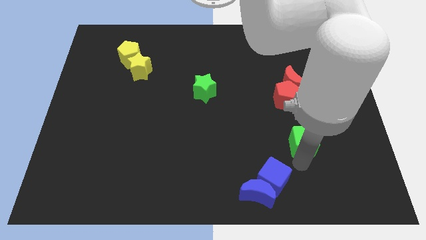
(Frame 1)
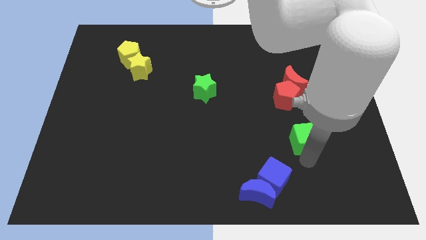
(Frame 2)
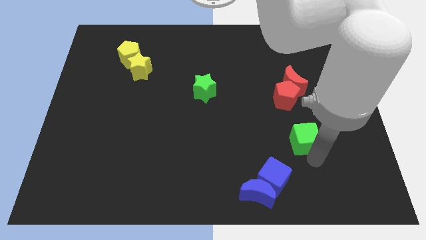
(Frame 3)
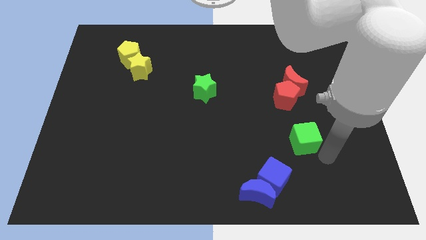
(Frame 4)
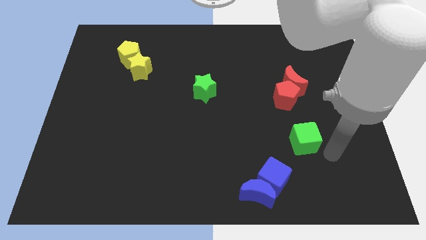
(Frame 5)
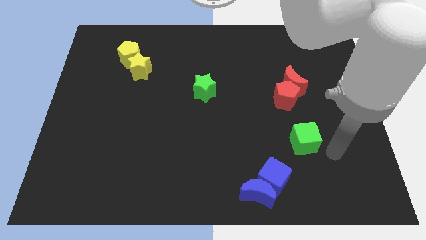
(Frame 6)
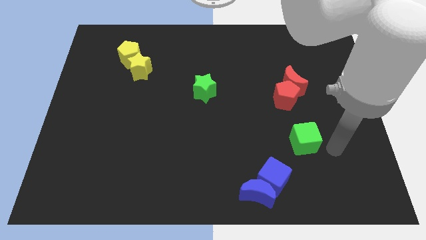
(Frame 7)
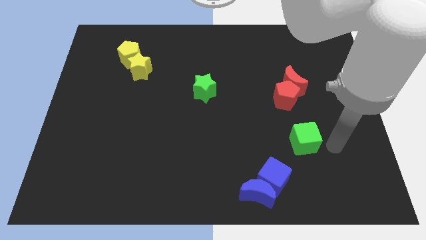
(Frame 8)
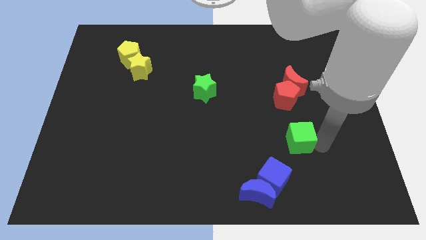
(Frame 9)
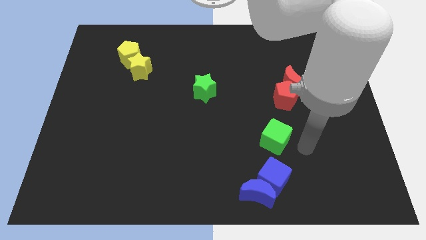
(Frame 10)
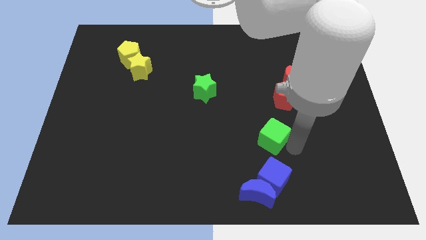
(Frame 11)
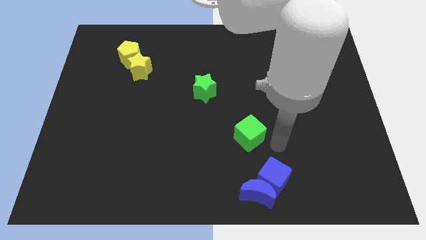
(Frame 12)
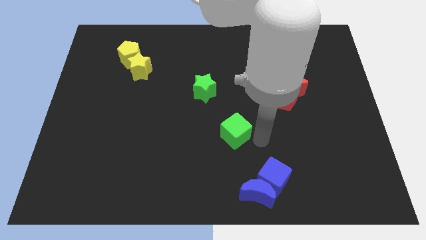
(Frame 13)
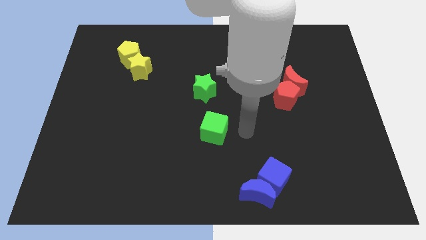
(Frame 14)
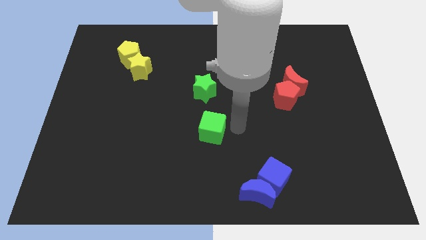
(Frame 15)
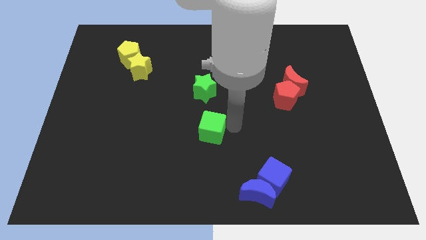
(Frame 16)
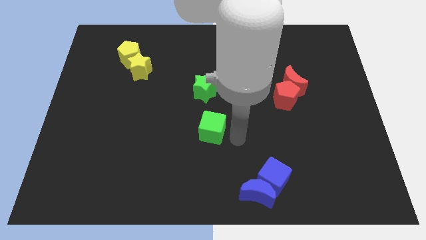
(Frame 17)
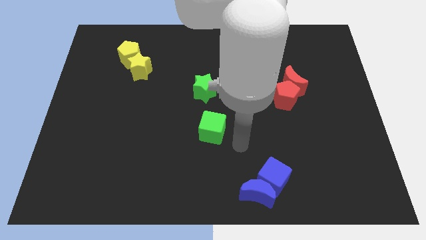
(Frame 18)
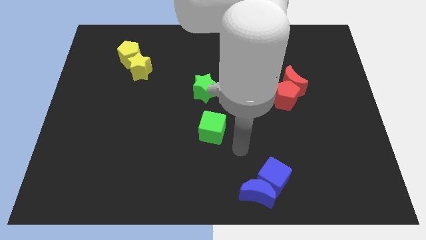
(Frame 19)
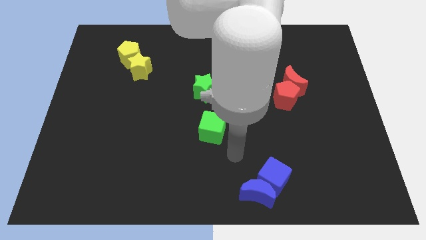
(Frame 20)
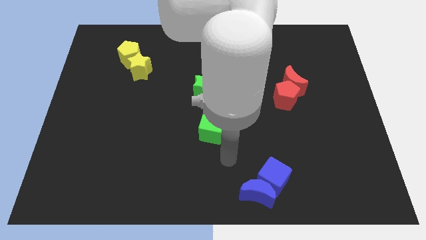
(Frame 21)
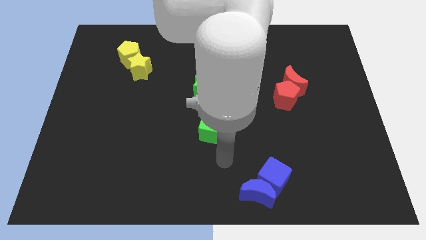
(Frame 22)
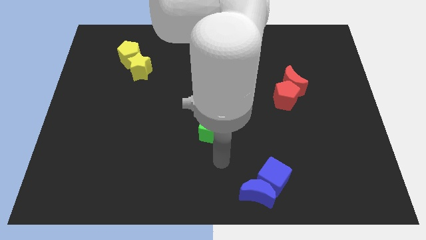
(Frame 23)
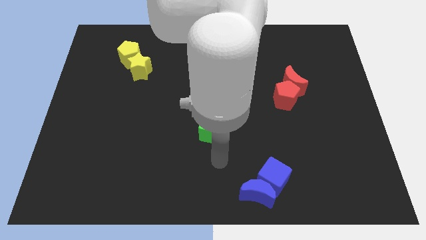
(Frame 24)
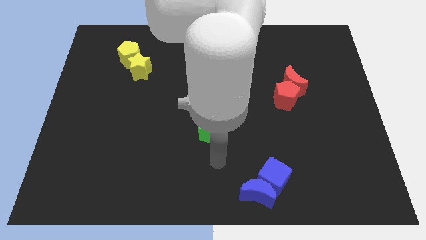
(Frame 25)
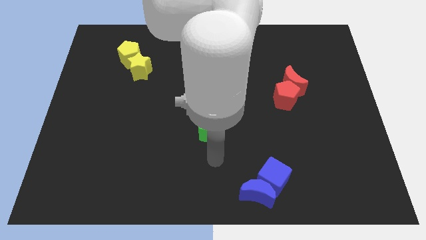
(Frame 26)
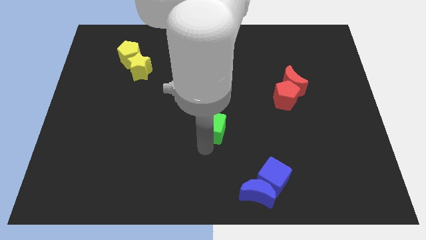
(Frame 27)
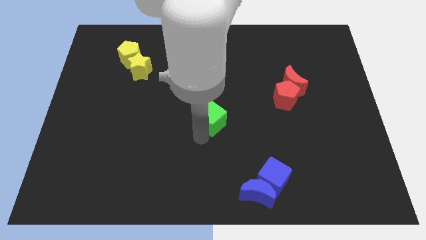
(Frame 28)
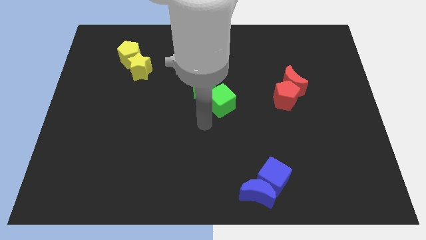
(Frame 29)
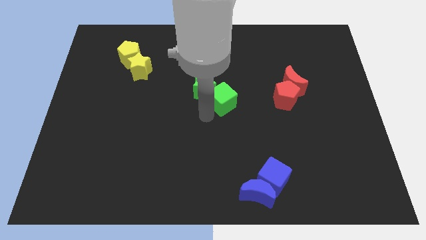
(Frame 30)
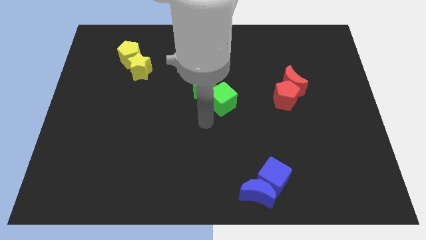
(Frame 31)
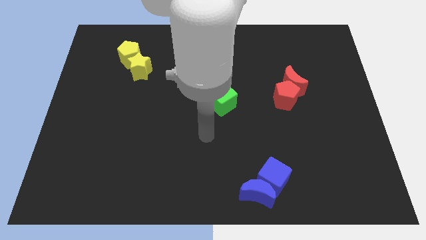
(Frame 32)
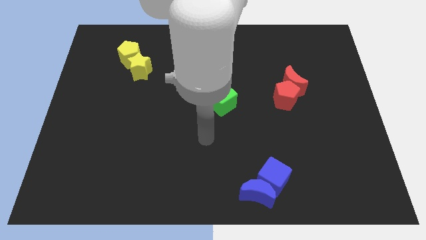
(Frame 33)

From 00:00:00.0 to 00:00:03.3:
move the green cube towards the green star

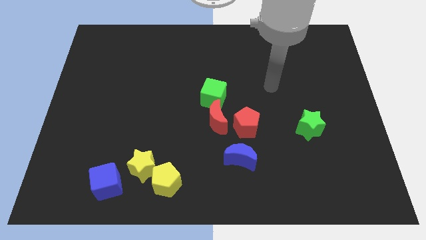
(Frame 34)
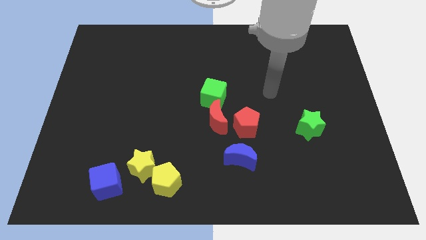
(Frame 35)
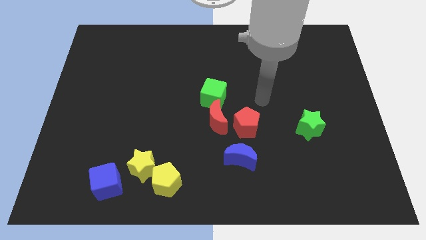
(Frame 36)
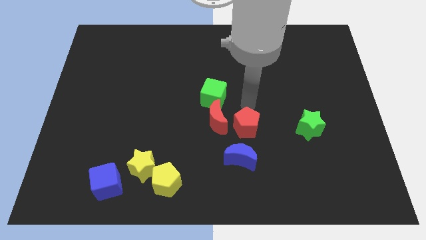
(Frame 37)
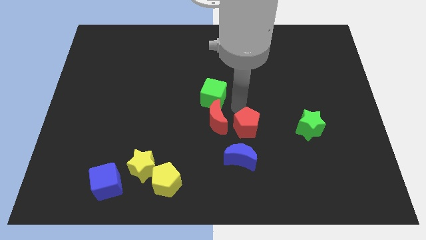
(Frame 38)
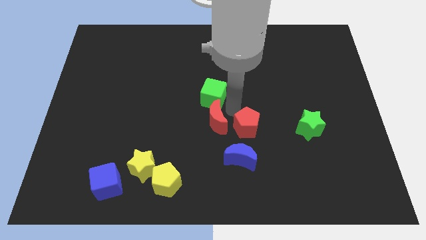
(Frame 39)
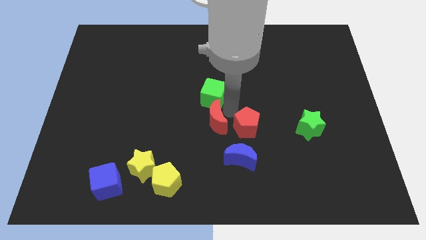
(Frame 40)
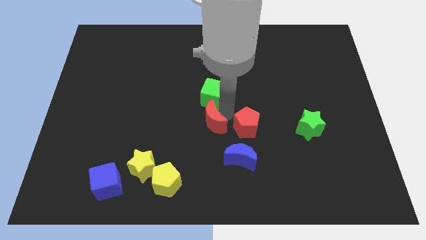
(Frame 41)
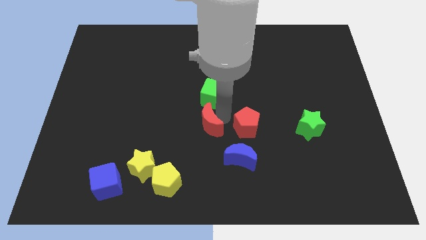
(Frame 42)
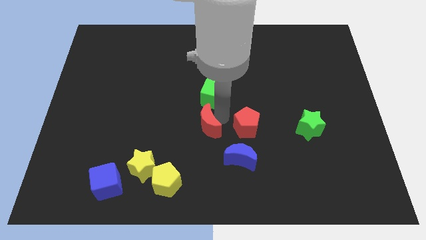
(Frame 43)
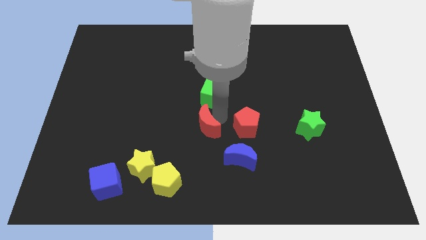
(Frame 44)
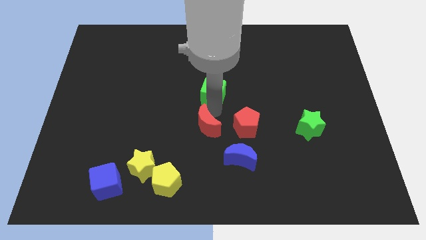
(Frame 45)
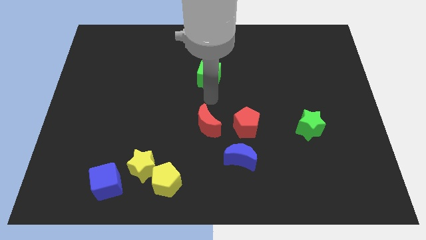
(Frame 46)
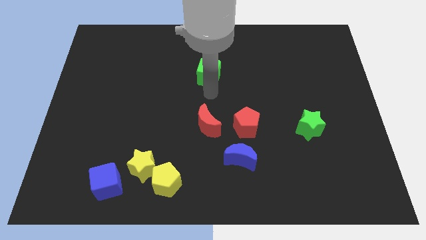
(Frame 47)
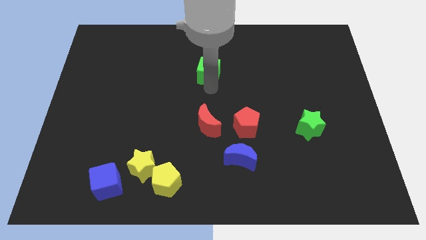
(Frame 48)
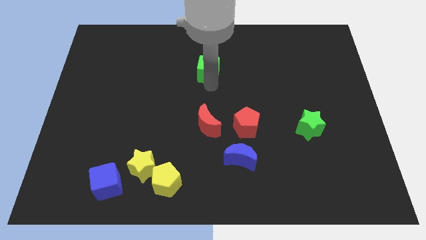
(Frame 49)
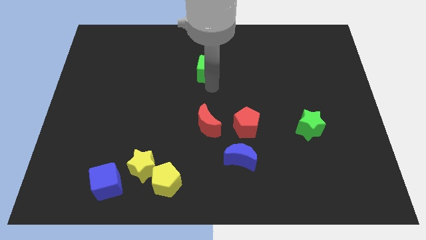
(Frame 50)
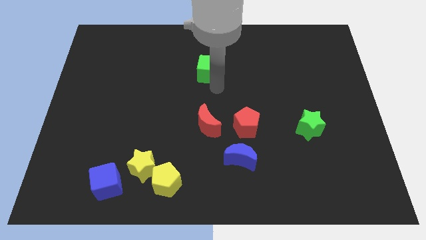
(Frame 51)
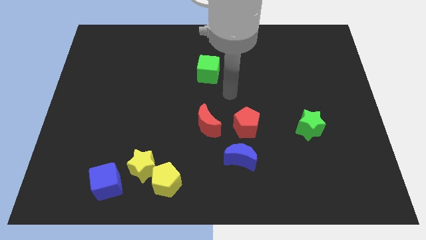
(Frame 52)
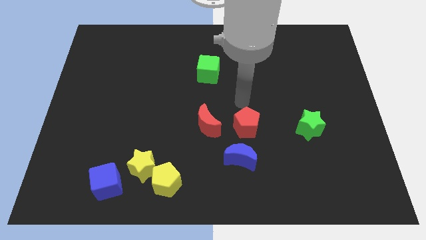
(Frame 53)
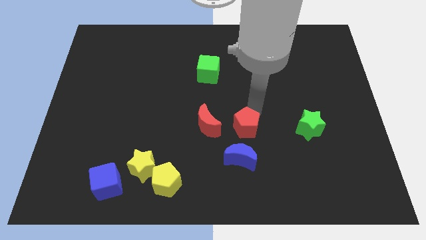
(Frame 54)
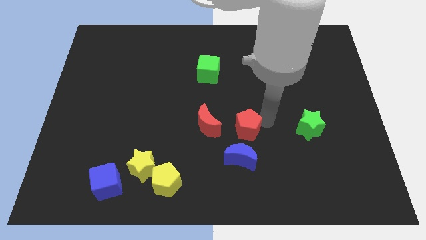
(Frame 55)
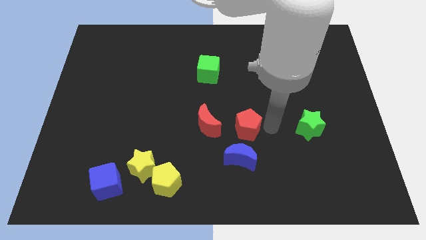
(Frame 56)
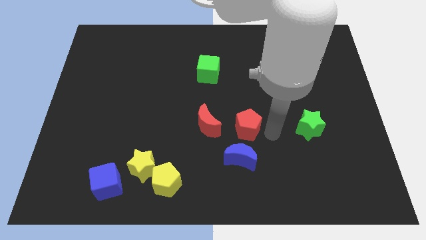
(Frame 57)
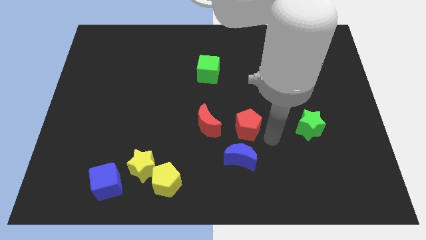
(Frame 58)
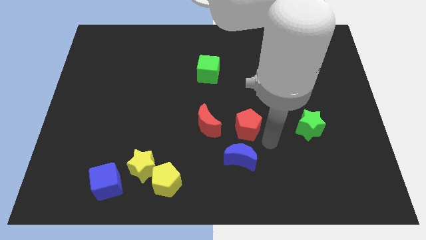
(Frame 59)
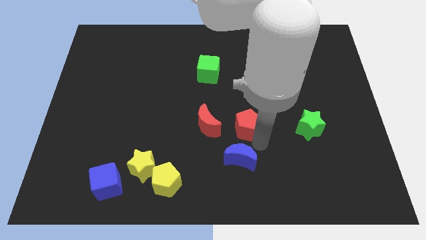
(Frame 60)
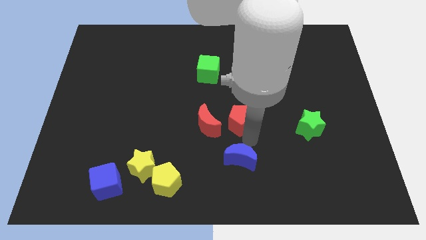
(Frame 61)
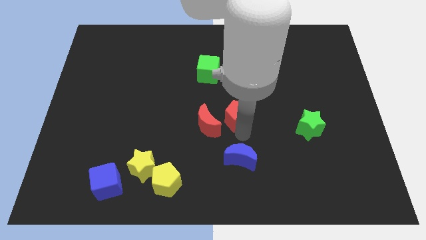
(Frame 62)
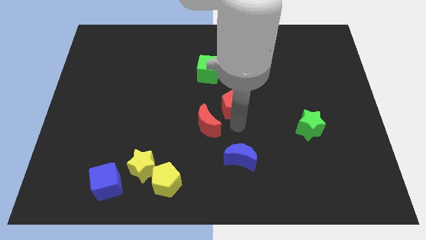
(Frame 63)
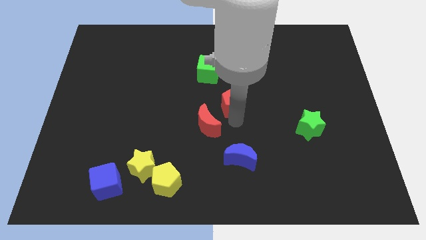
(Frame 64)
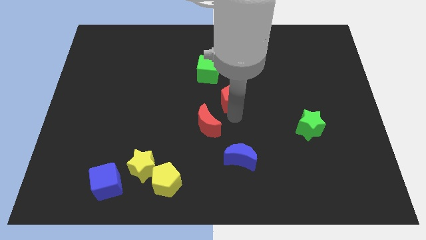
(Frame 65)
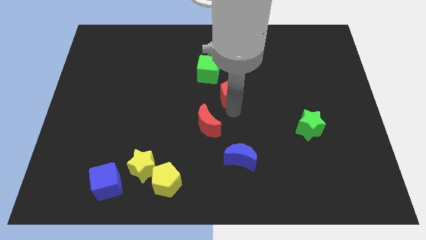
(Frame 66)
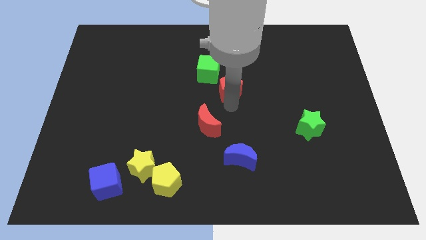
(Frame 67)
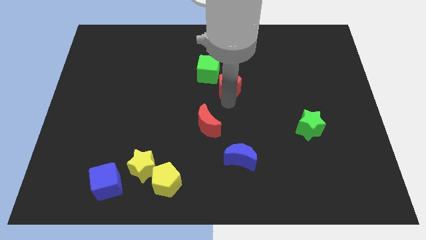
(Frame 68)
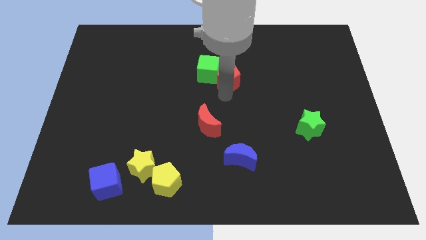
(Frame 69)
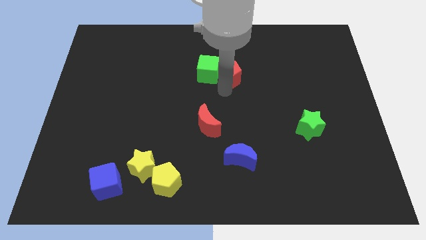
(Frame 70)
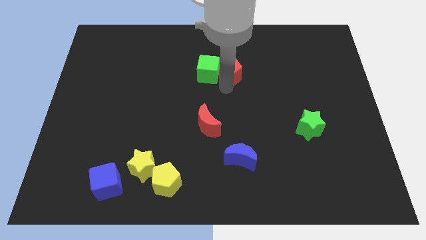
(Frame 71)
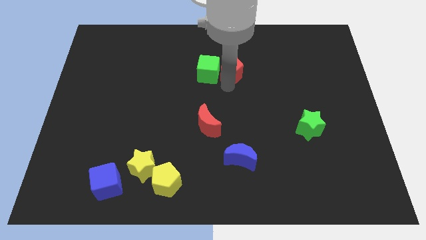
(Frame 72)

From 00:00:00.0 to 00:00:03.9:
move the green cube and red pentagon at the top side of the table

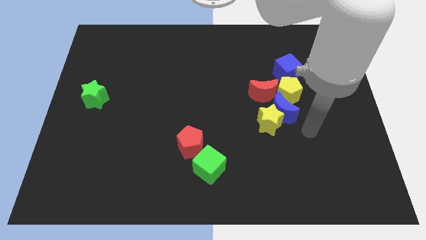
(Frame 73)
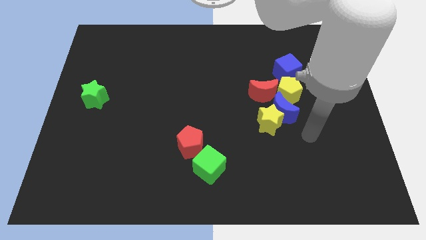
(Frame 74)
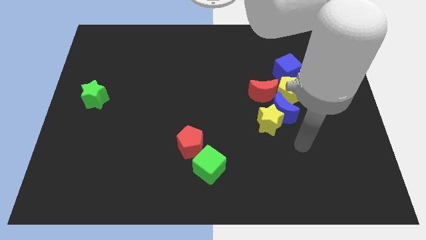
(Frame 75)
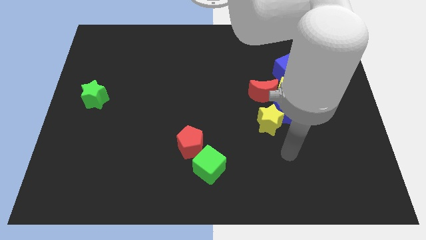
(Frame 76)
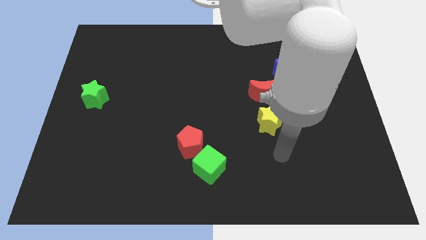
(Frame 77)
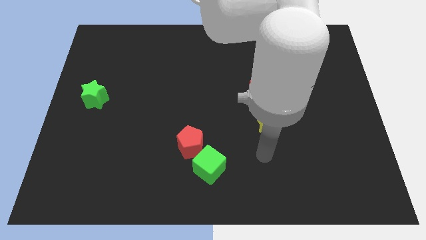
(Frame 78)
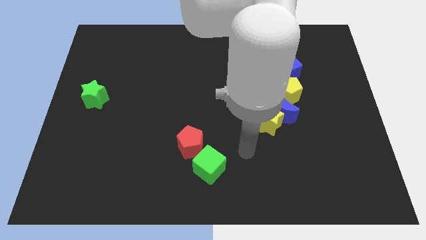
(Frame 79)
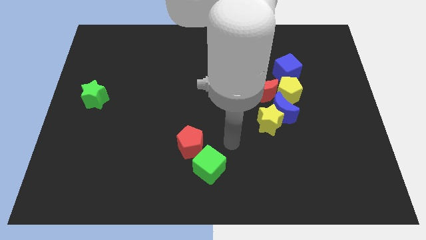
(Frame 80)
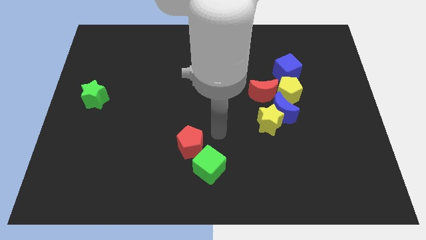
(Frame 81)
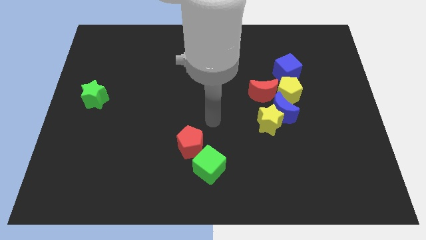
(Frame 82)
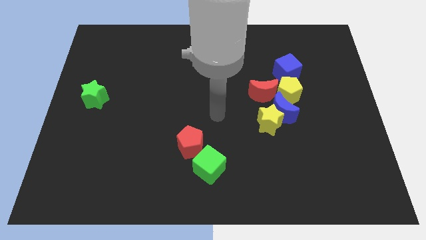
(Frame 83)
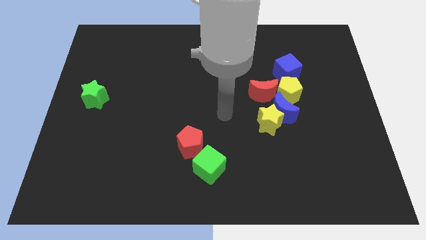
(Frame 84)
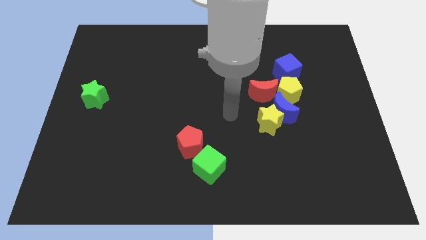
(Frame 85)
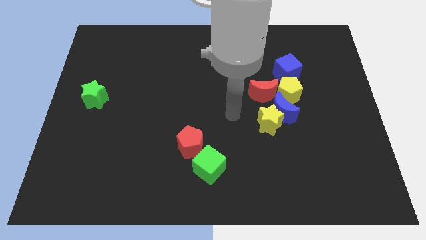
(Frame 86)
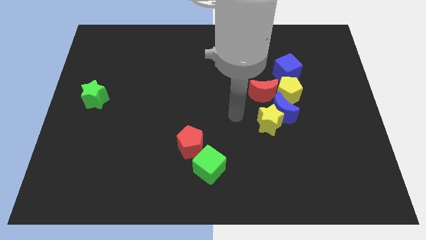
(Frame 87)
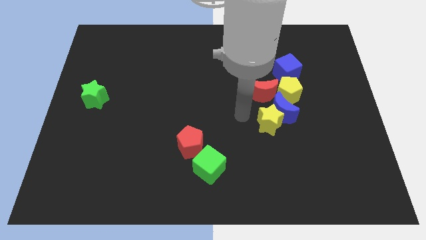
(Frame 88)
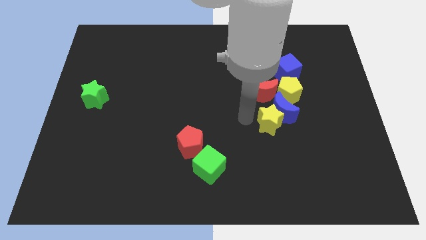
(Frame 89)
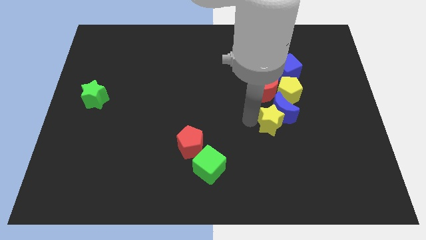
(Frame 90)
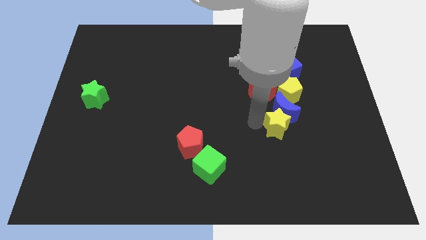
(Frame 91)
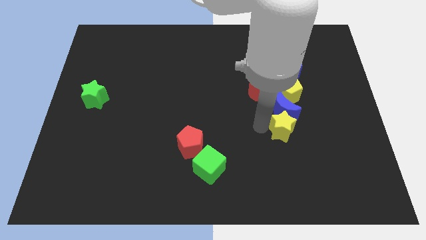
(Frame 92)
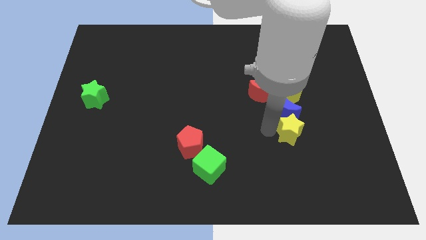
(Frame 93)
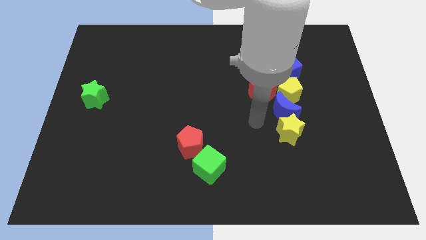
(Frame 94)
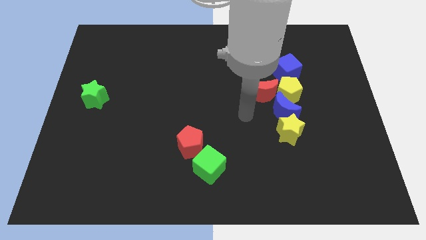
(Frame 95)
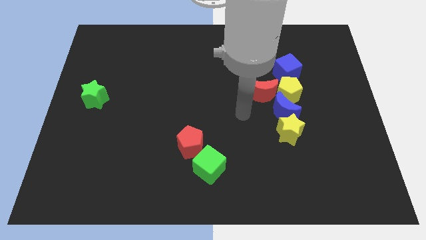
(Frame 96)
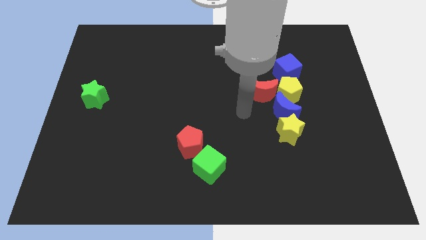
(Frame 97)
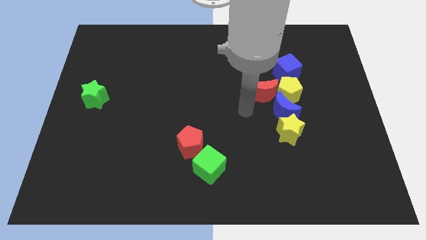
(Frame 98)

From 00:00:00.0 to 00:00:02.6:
push the yellow star to the right of the board
